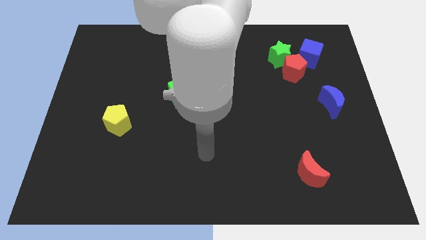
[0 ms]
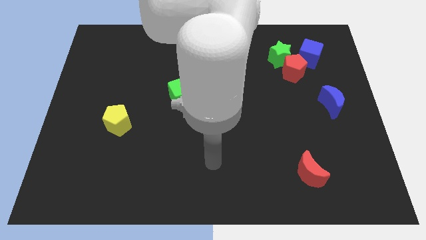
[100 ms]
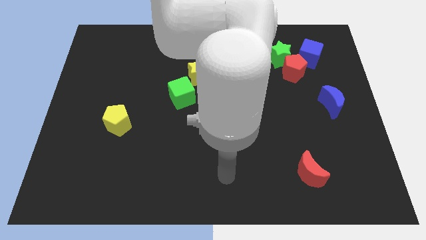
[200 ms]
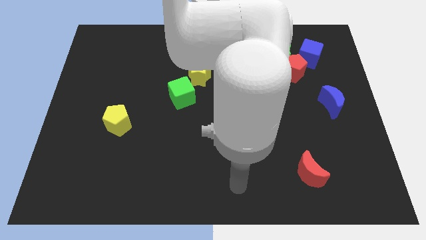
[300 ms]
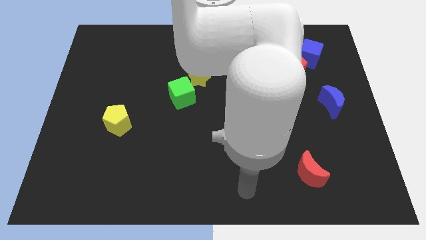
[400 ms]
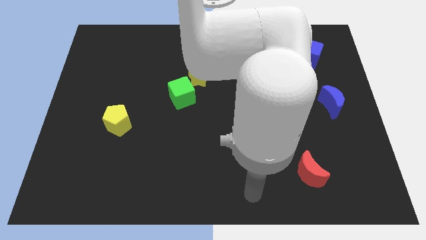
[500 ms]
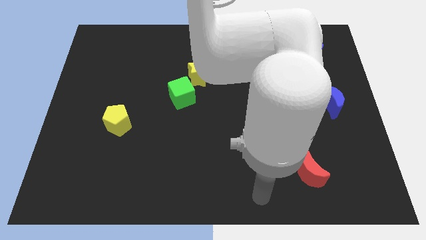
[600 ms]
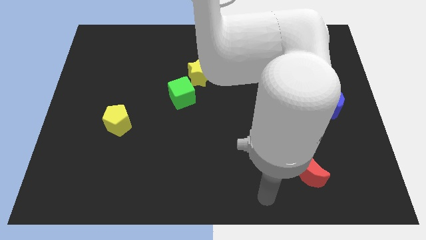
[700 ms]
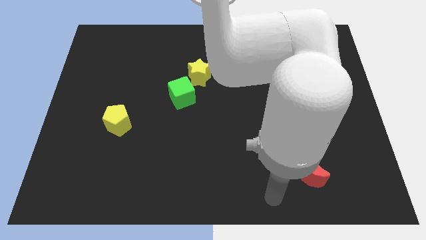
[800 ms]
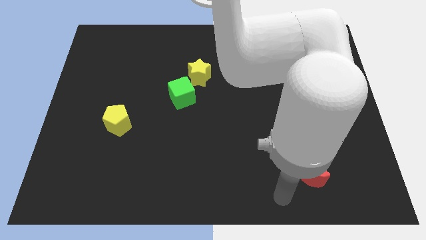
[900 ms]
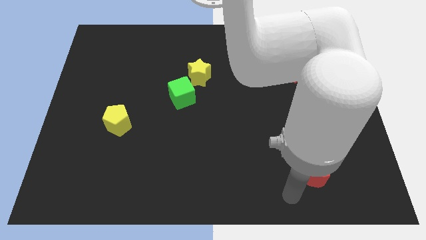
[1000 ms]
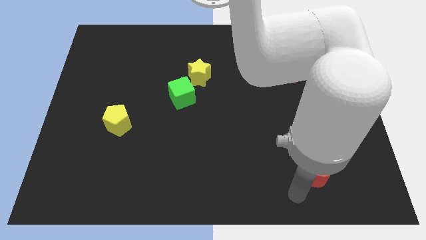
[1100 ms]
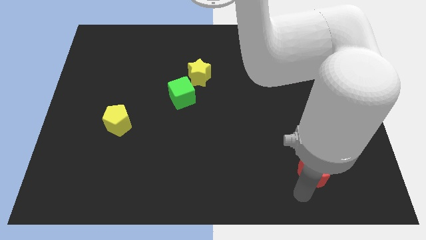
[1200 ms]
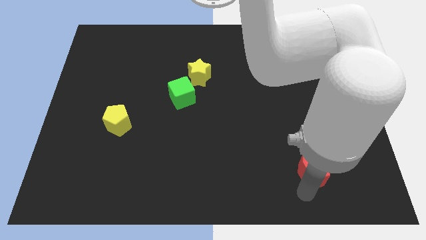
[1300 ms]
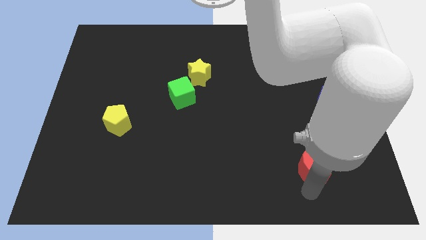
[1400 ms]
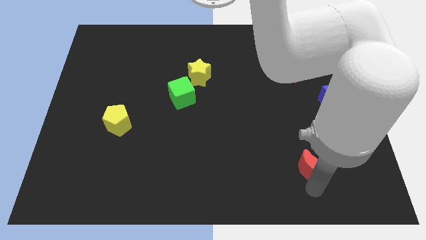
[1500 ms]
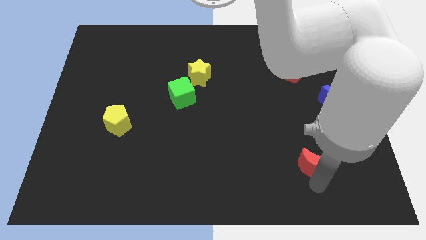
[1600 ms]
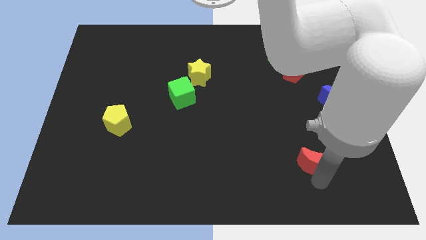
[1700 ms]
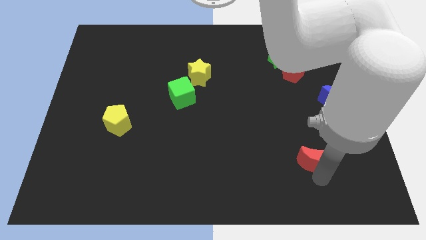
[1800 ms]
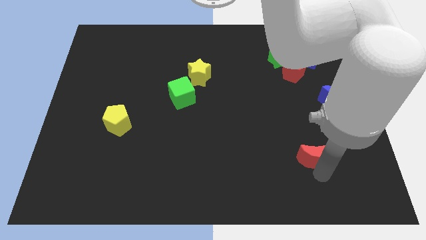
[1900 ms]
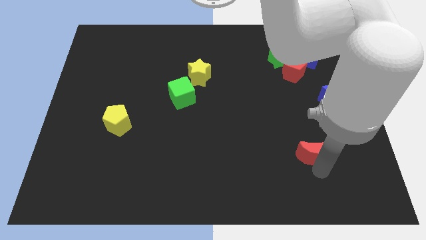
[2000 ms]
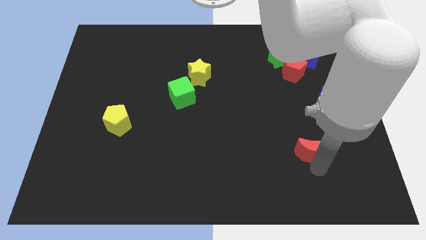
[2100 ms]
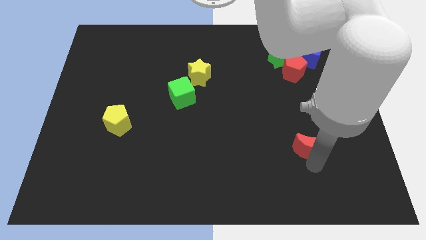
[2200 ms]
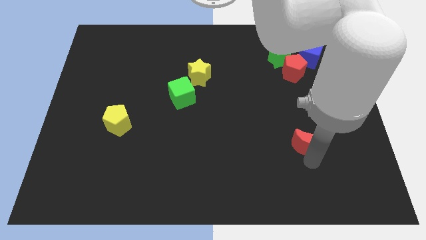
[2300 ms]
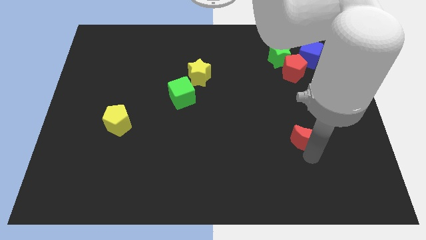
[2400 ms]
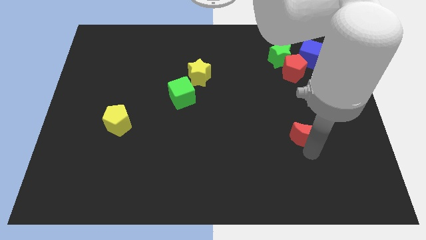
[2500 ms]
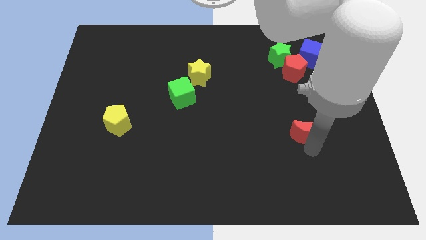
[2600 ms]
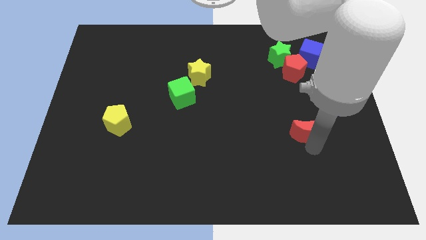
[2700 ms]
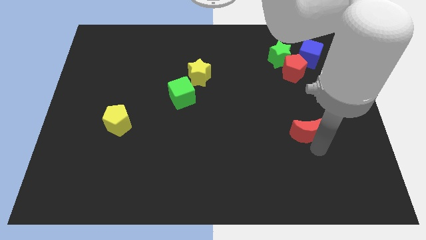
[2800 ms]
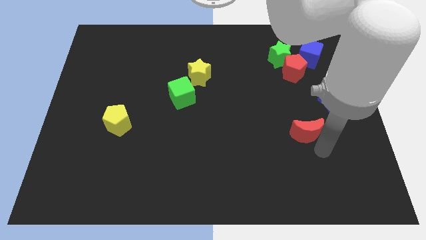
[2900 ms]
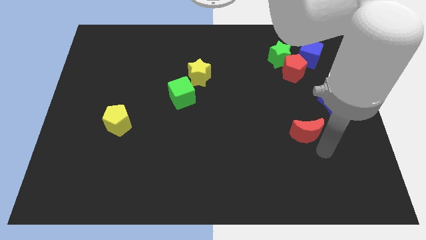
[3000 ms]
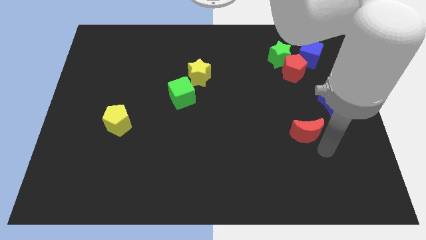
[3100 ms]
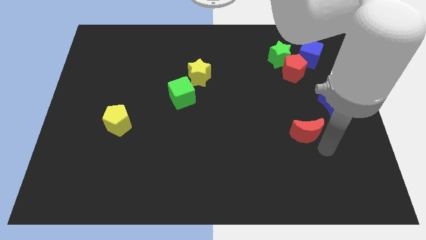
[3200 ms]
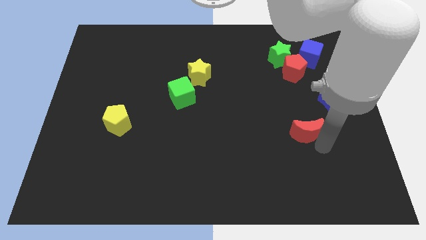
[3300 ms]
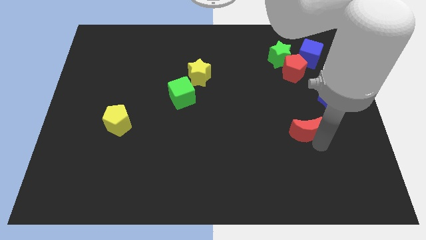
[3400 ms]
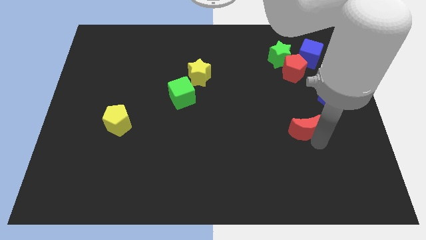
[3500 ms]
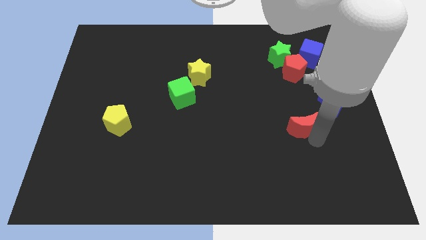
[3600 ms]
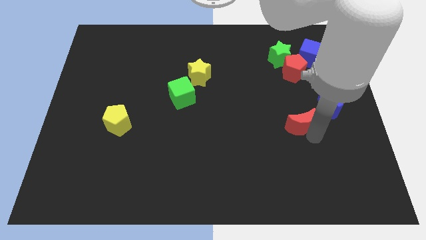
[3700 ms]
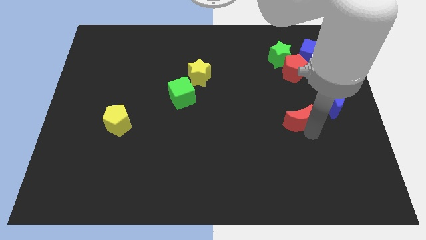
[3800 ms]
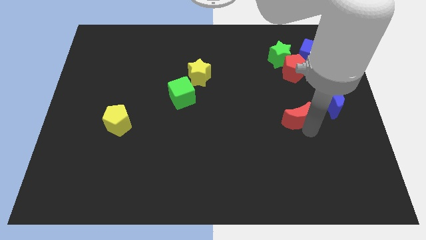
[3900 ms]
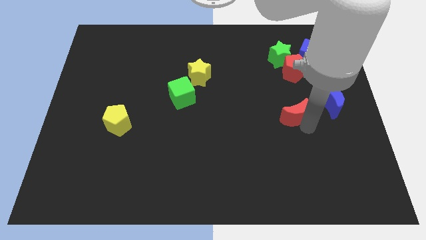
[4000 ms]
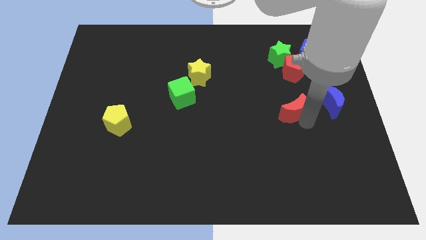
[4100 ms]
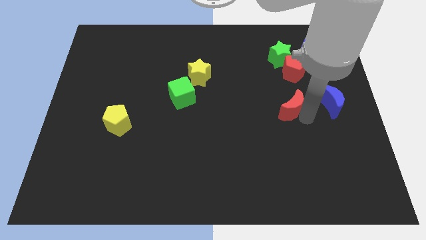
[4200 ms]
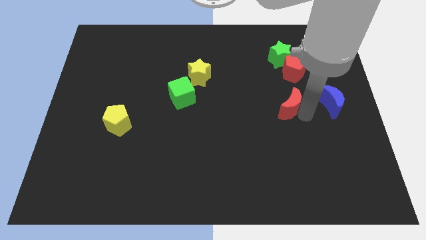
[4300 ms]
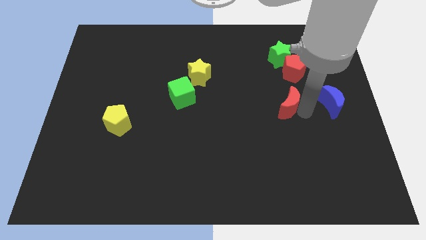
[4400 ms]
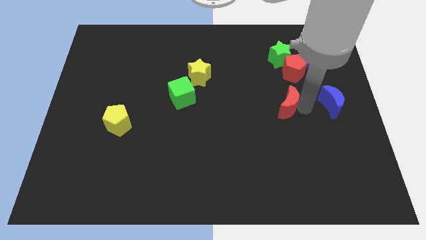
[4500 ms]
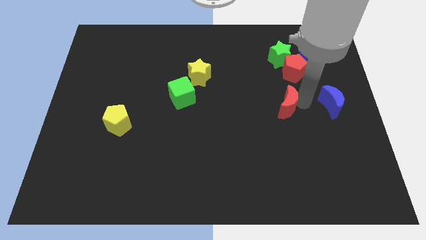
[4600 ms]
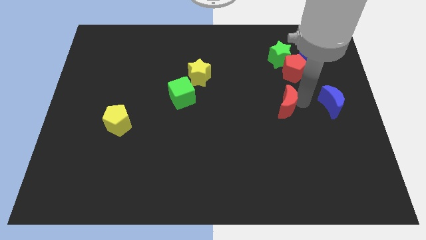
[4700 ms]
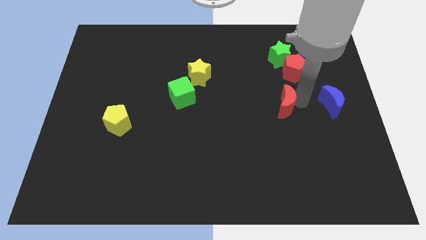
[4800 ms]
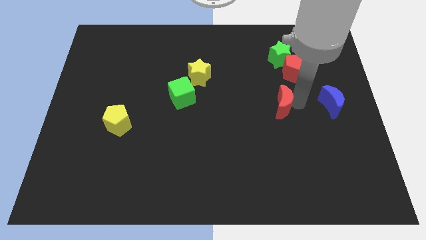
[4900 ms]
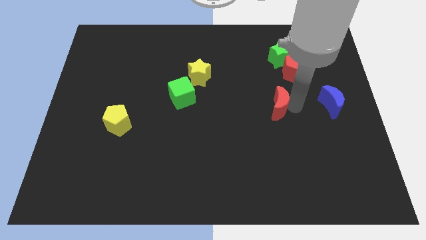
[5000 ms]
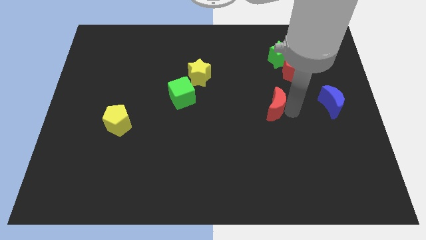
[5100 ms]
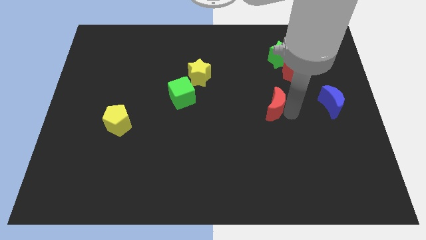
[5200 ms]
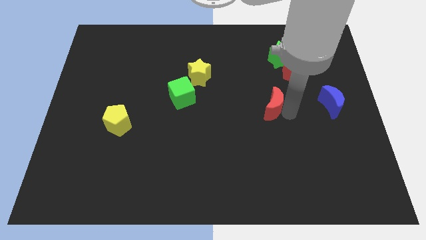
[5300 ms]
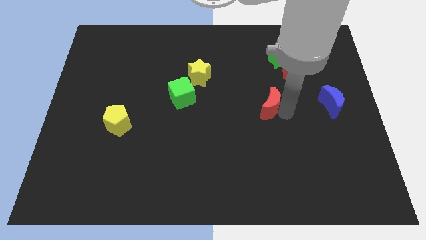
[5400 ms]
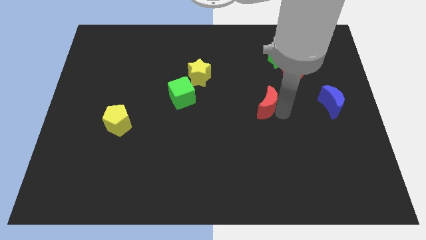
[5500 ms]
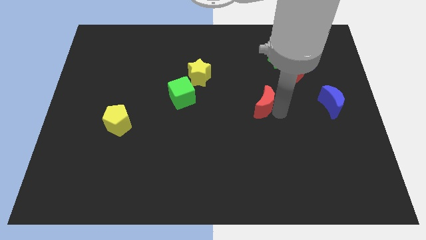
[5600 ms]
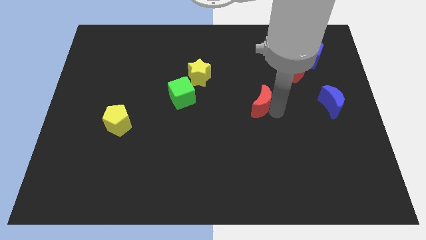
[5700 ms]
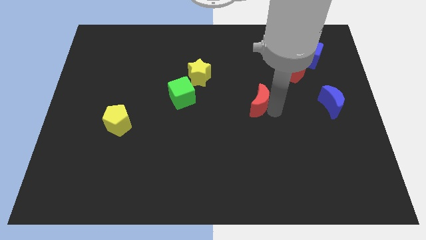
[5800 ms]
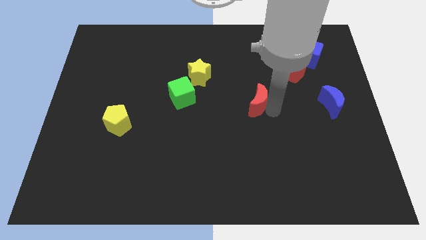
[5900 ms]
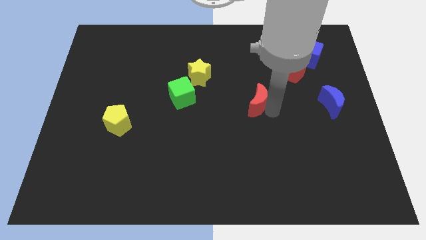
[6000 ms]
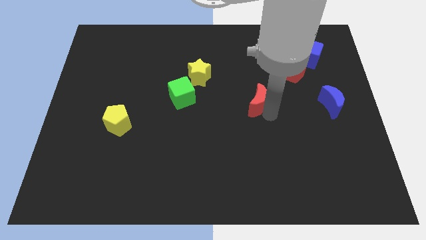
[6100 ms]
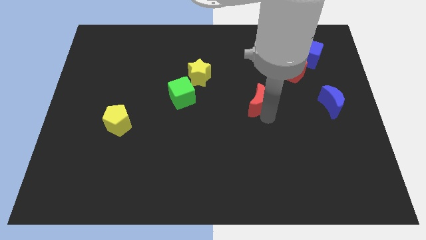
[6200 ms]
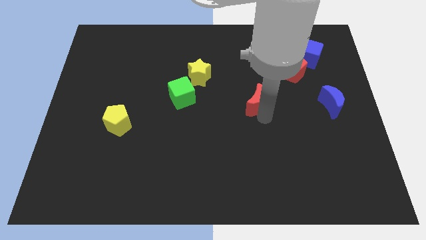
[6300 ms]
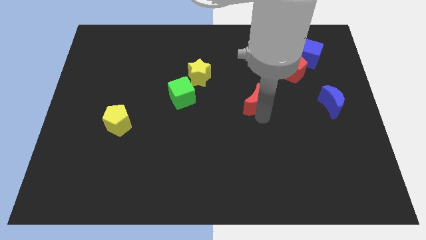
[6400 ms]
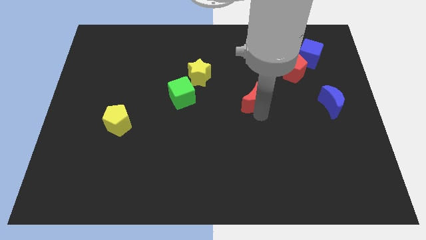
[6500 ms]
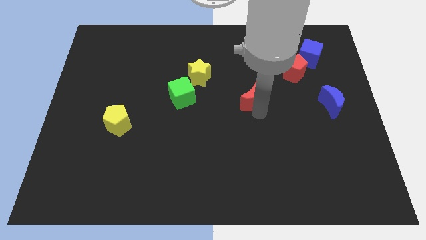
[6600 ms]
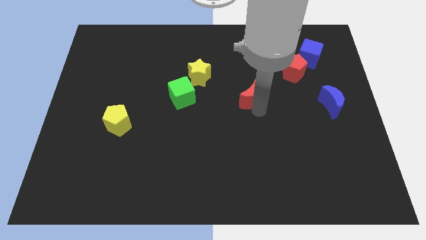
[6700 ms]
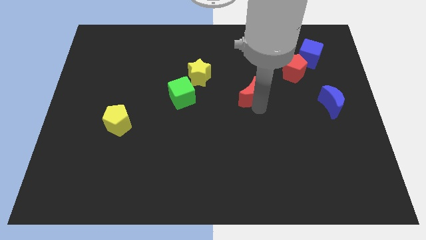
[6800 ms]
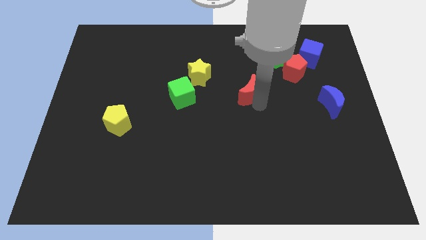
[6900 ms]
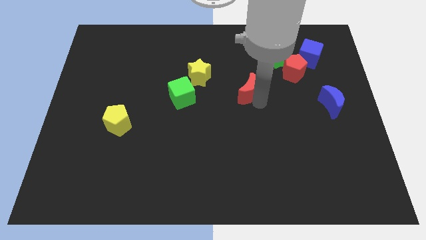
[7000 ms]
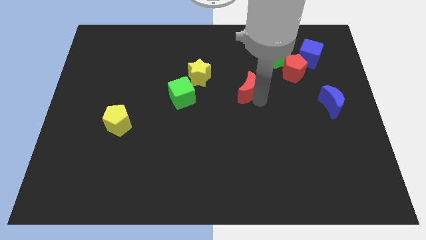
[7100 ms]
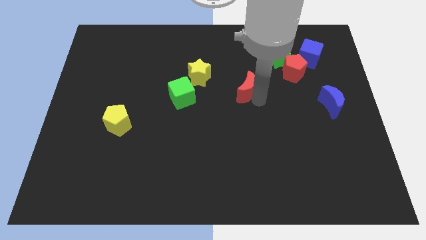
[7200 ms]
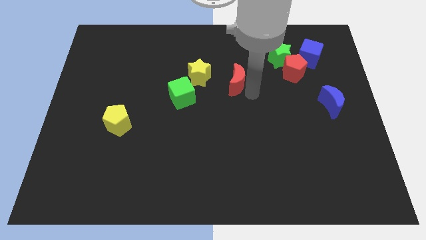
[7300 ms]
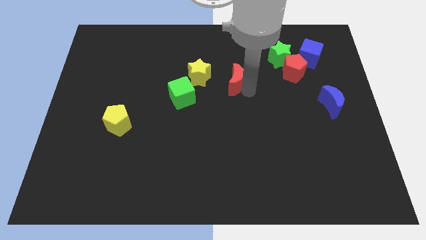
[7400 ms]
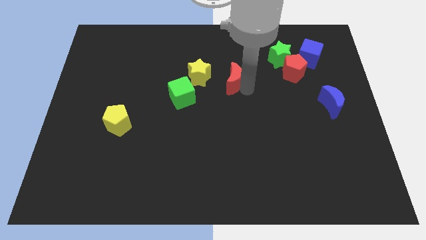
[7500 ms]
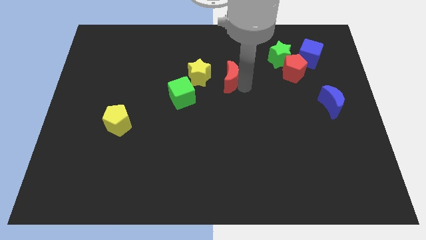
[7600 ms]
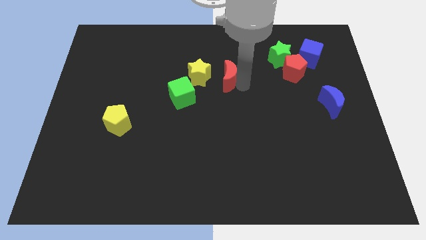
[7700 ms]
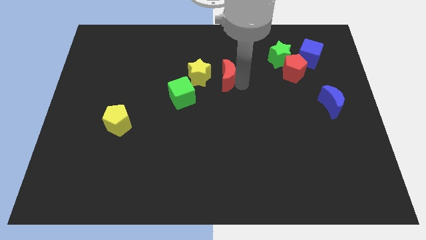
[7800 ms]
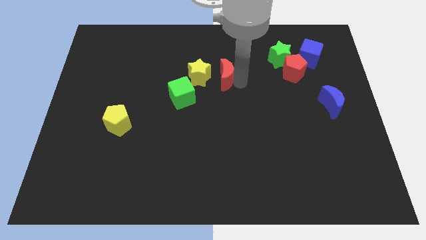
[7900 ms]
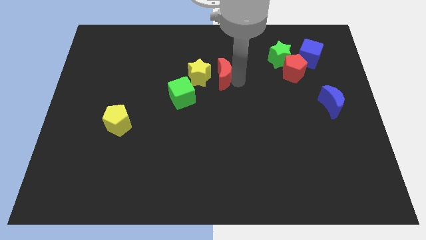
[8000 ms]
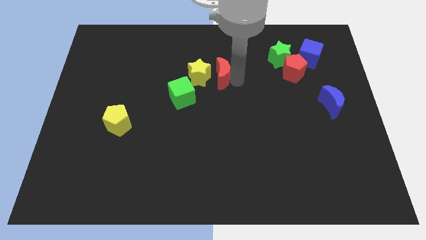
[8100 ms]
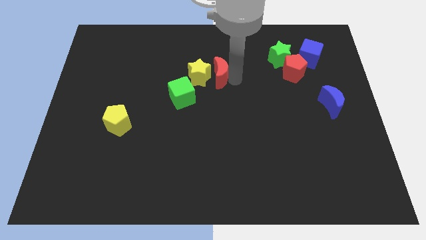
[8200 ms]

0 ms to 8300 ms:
slide the red moon close to the yellow star

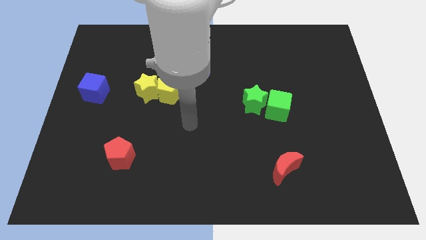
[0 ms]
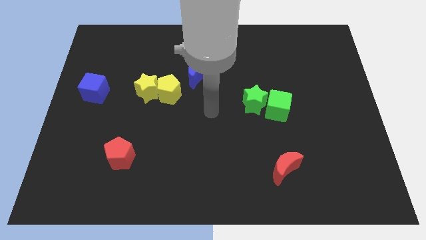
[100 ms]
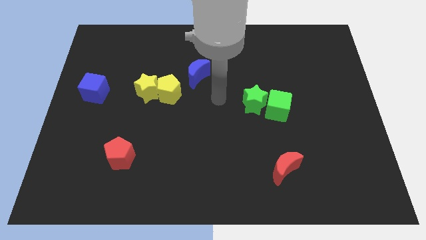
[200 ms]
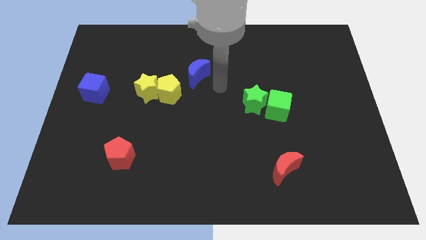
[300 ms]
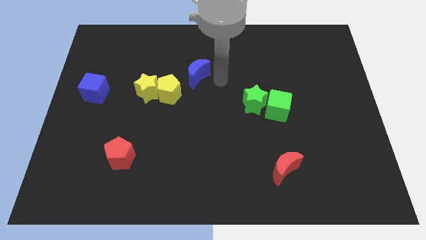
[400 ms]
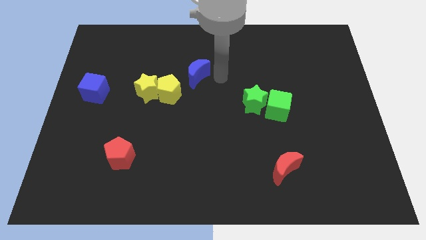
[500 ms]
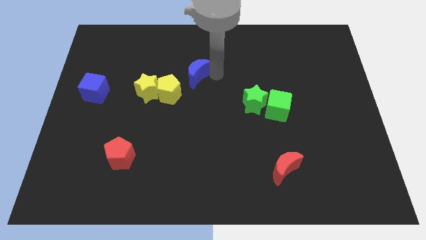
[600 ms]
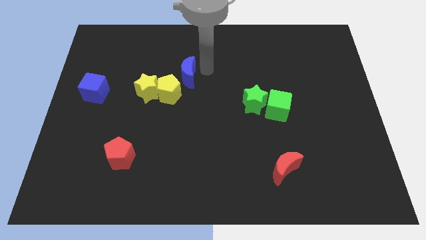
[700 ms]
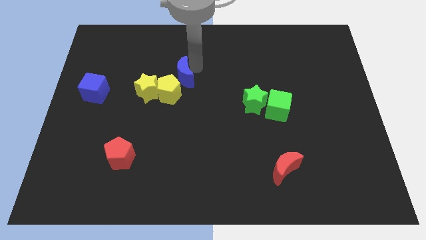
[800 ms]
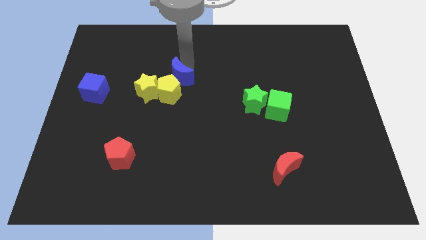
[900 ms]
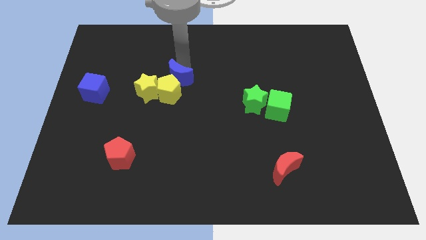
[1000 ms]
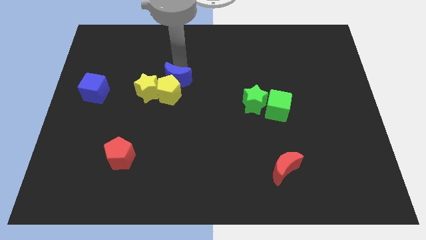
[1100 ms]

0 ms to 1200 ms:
push the blue moon close to the yellow pentagon
